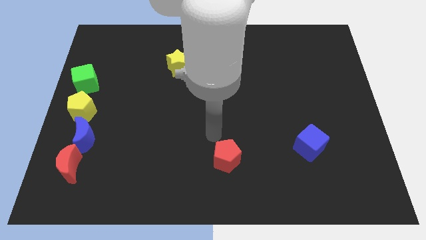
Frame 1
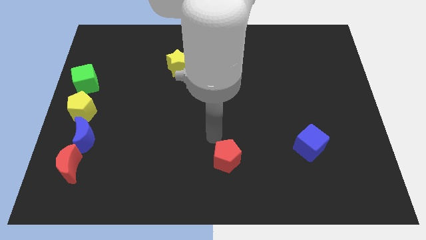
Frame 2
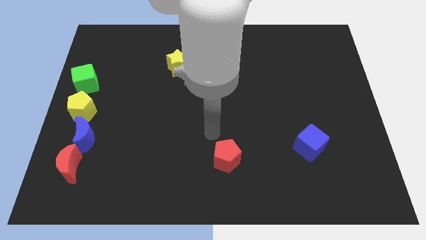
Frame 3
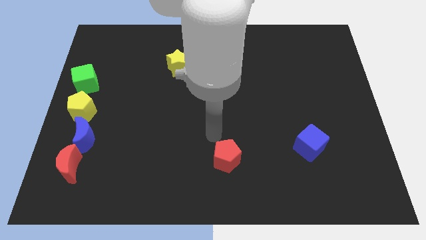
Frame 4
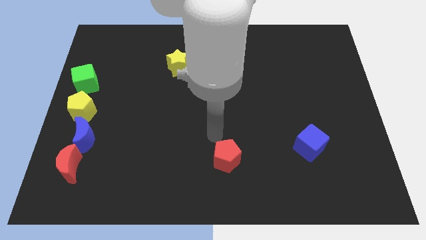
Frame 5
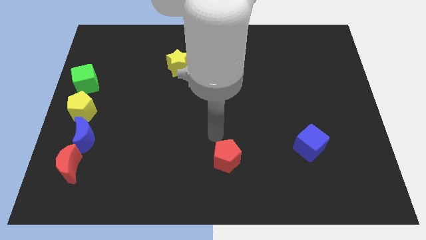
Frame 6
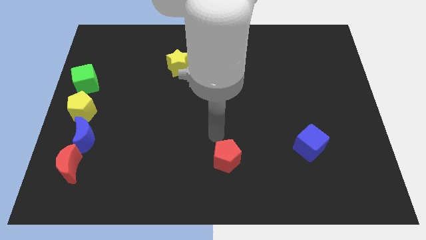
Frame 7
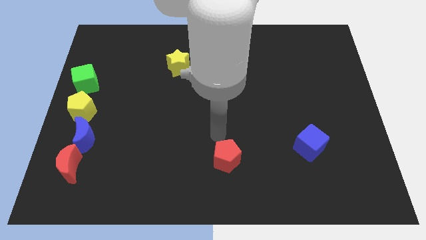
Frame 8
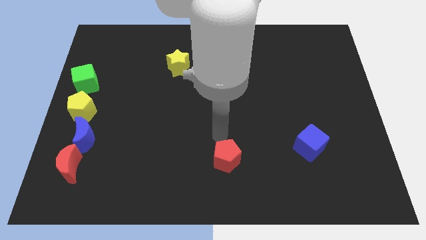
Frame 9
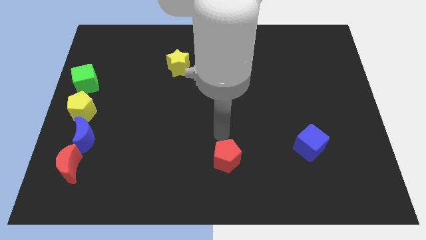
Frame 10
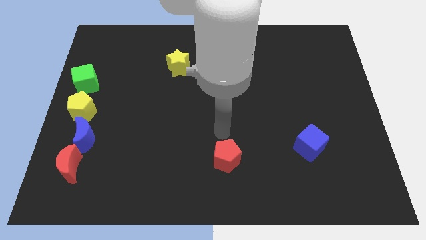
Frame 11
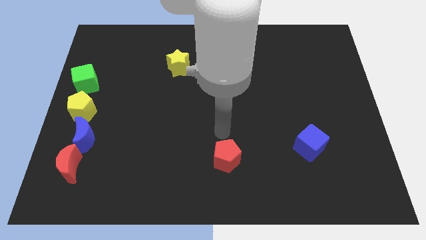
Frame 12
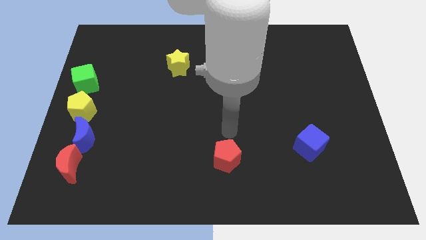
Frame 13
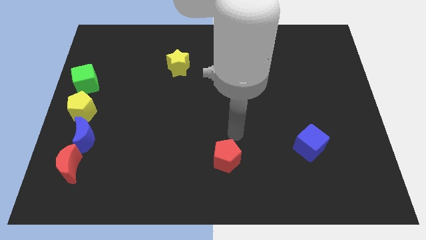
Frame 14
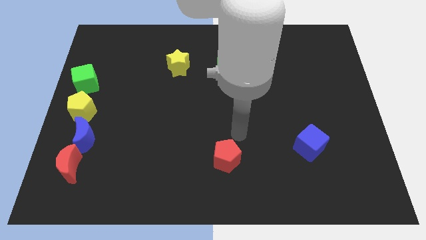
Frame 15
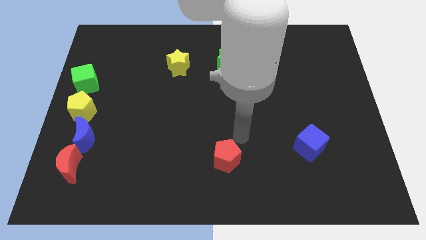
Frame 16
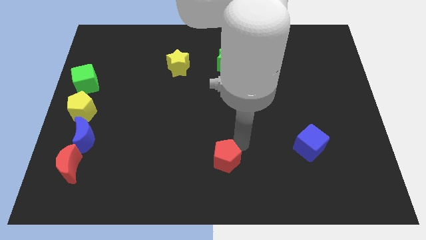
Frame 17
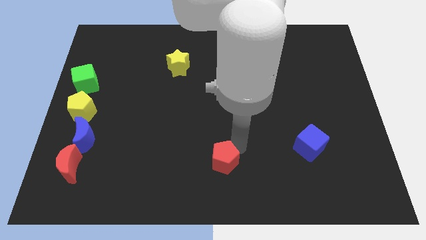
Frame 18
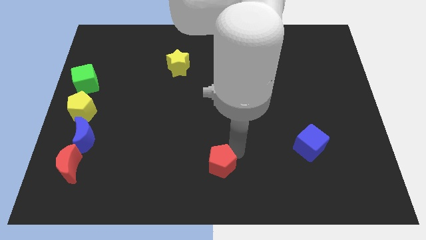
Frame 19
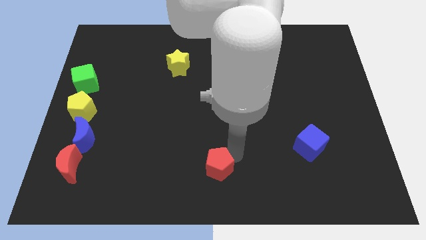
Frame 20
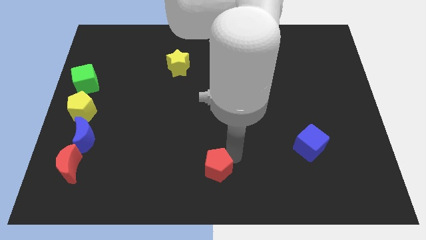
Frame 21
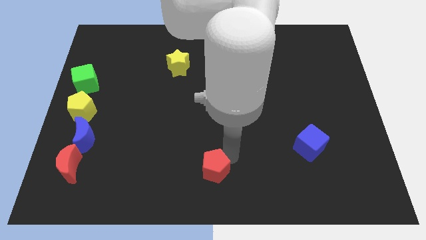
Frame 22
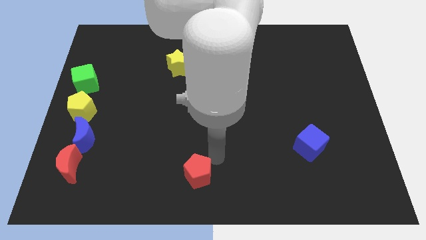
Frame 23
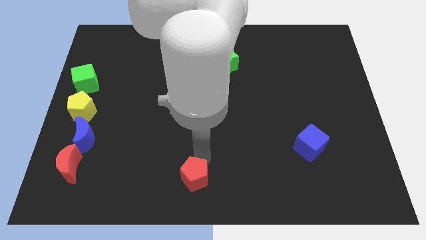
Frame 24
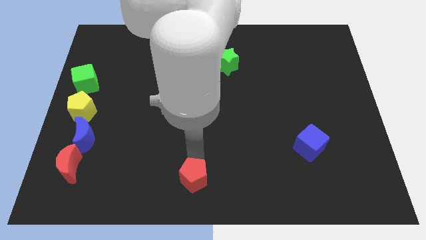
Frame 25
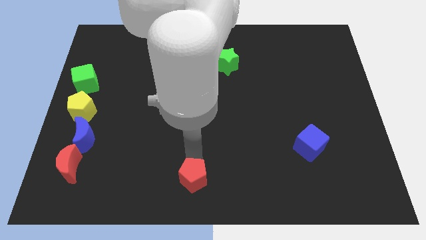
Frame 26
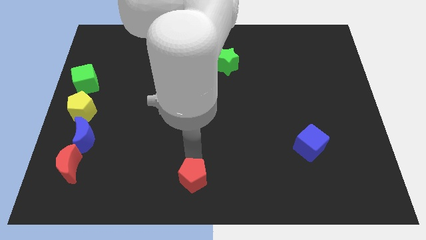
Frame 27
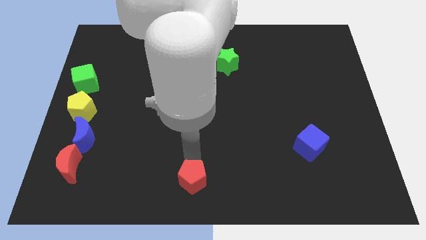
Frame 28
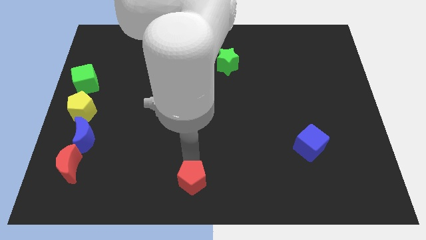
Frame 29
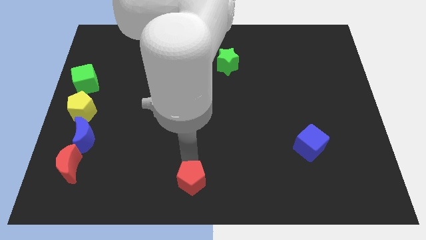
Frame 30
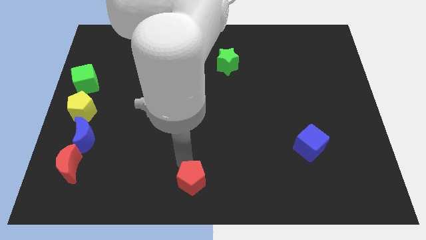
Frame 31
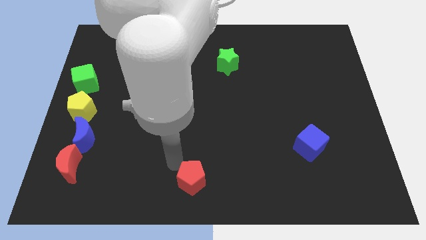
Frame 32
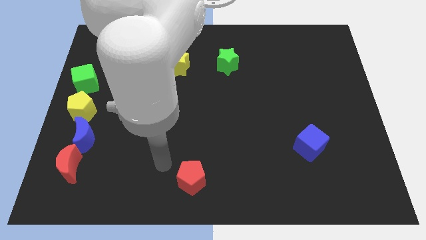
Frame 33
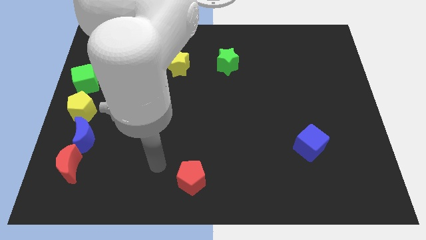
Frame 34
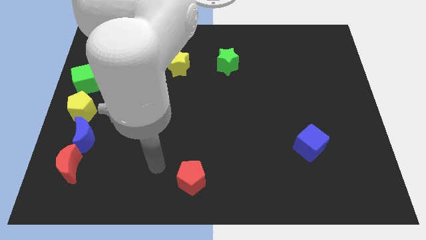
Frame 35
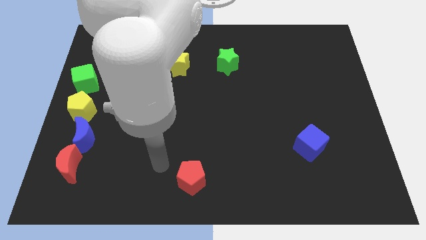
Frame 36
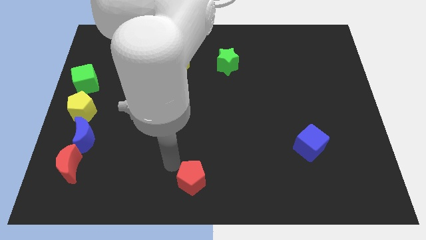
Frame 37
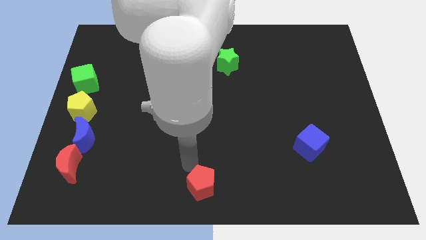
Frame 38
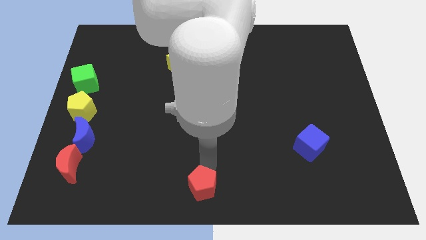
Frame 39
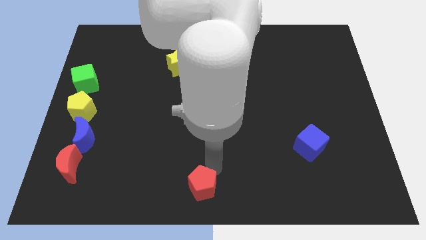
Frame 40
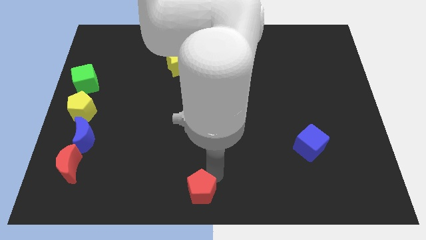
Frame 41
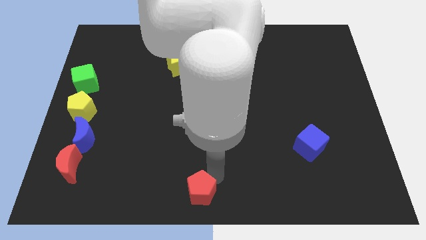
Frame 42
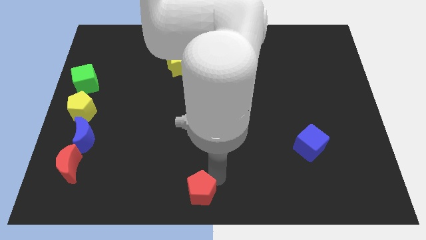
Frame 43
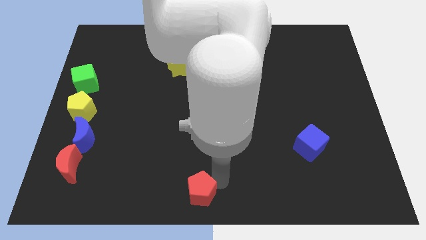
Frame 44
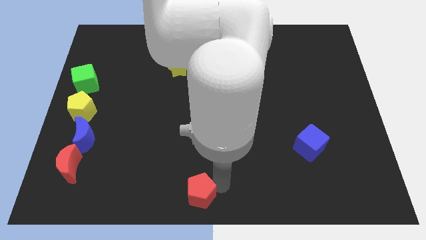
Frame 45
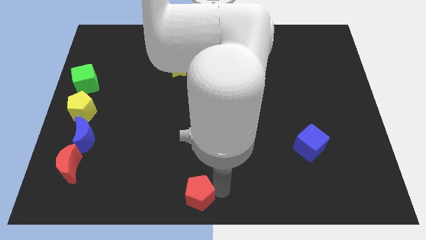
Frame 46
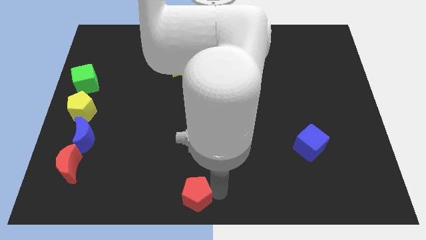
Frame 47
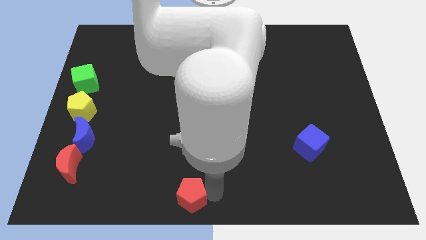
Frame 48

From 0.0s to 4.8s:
push the red pentagon at the bottom center

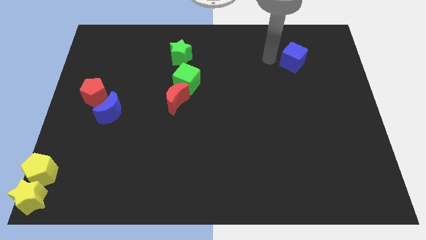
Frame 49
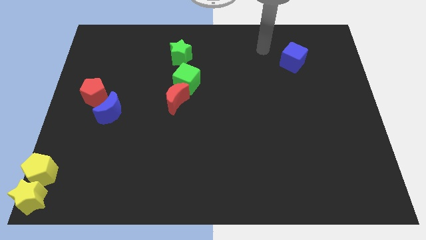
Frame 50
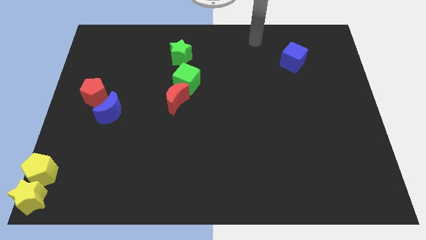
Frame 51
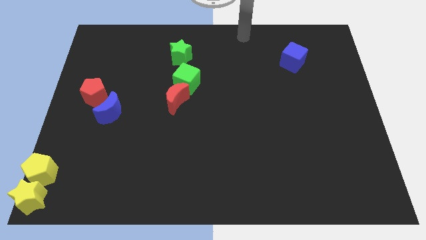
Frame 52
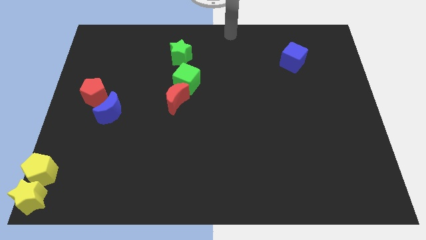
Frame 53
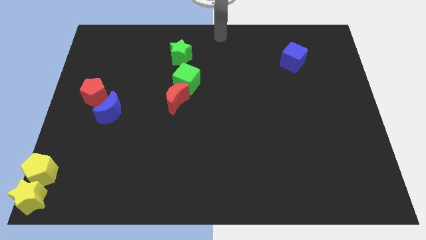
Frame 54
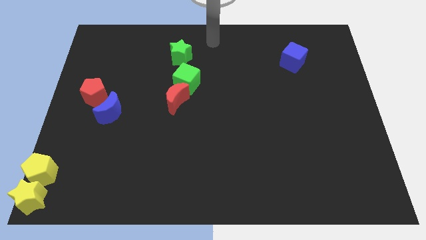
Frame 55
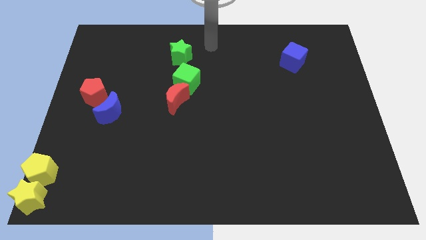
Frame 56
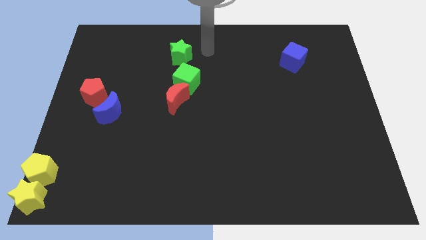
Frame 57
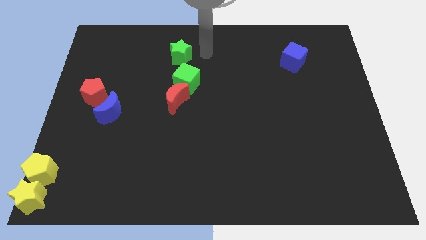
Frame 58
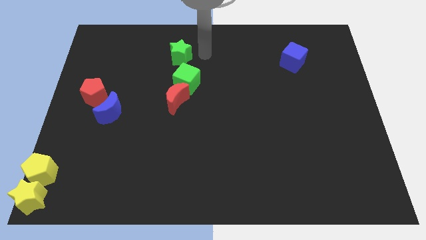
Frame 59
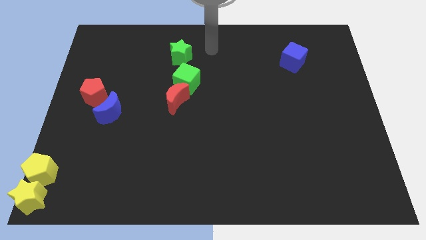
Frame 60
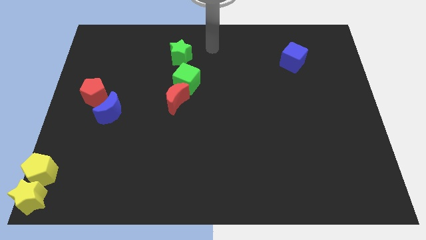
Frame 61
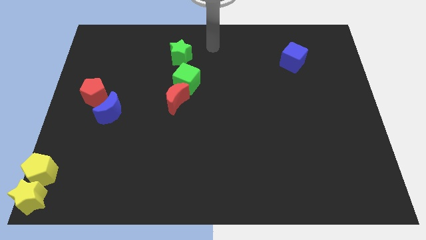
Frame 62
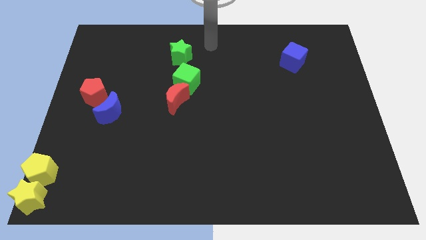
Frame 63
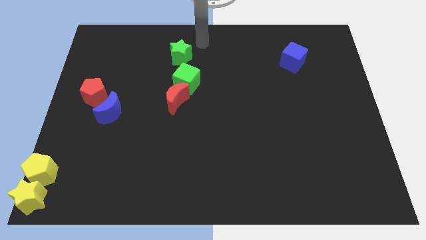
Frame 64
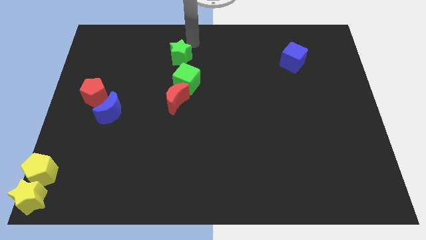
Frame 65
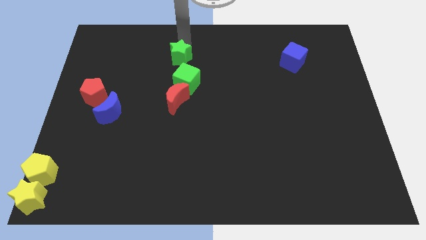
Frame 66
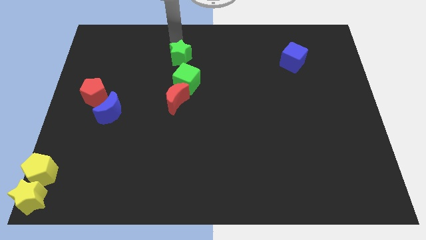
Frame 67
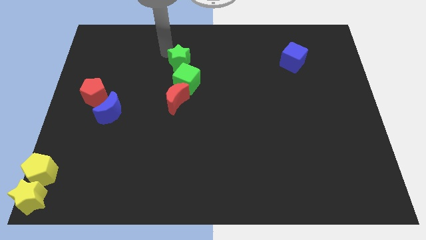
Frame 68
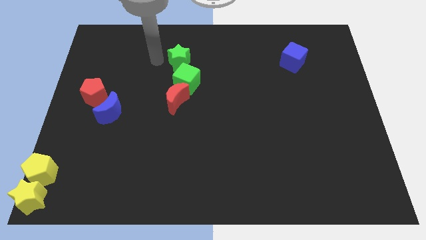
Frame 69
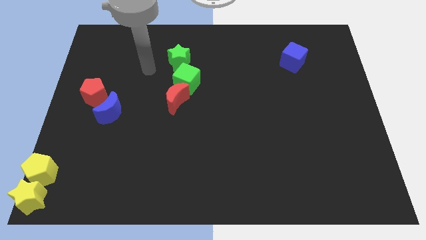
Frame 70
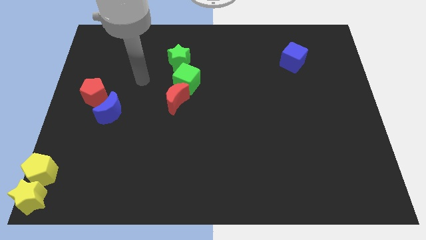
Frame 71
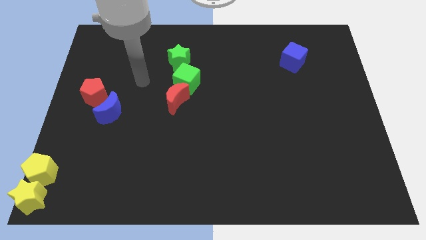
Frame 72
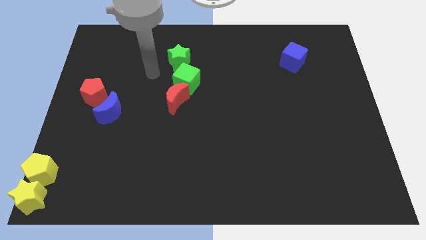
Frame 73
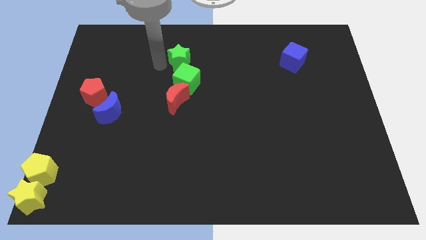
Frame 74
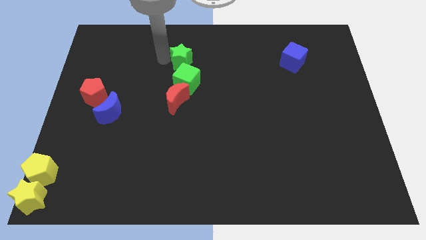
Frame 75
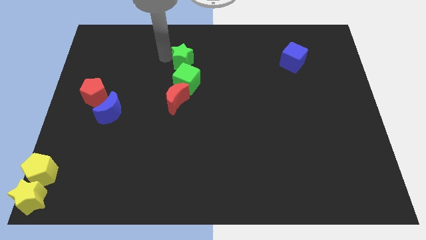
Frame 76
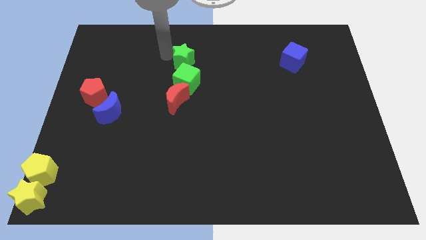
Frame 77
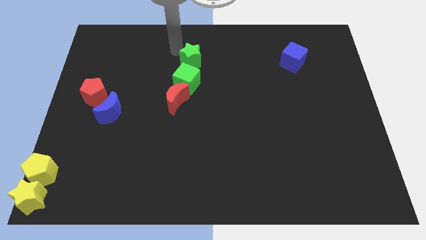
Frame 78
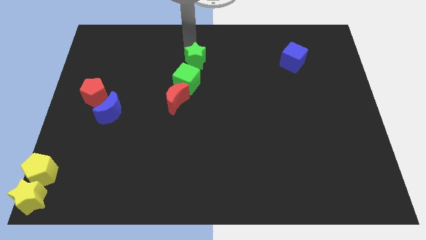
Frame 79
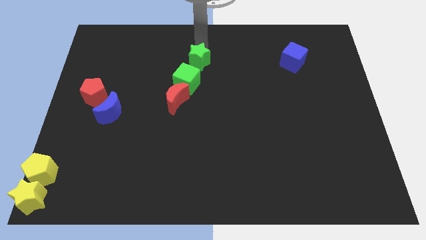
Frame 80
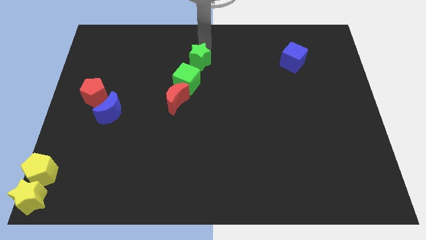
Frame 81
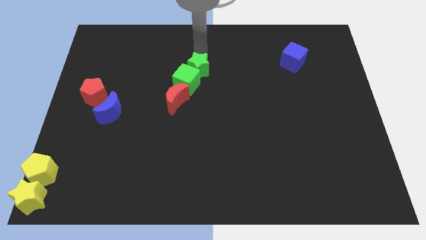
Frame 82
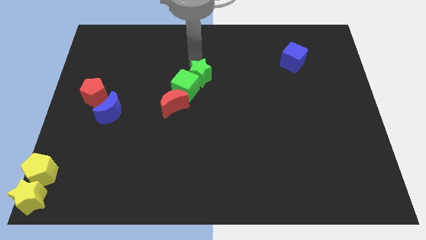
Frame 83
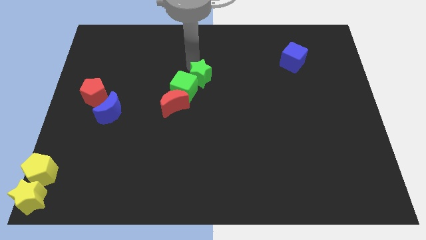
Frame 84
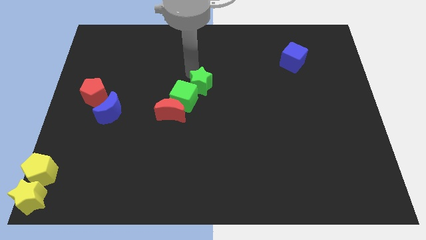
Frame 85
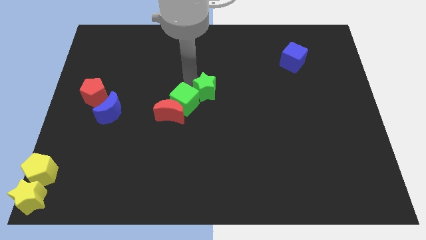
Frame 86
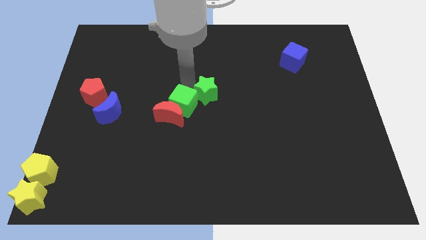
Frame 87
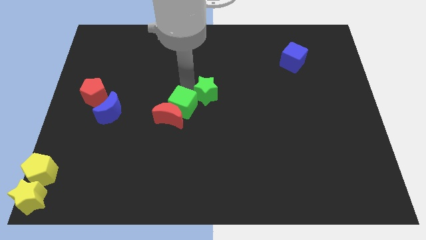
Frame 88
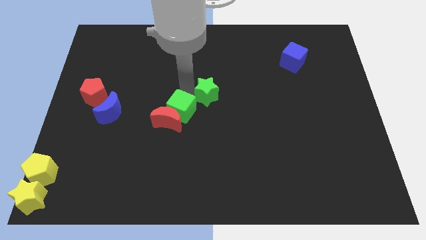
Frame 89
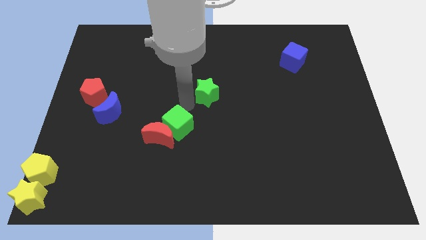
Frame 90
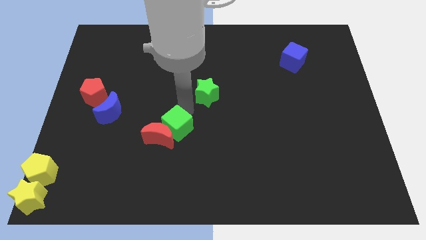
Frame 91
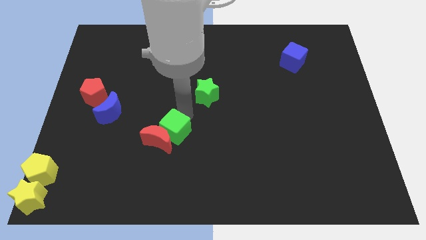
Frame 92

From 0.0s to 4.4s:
separate the green star and green cube
